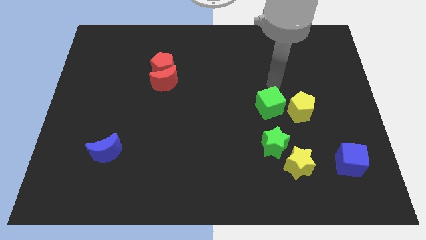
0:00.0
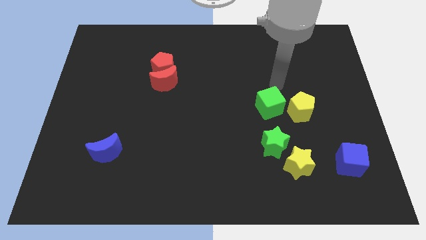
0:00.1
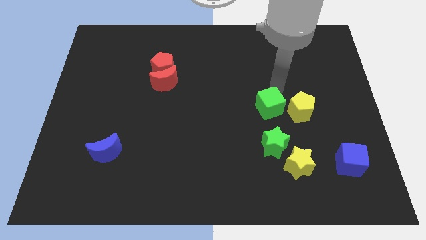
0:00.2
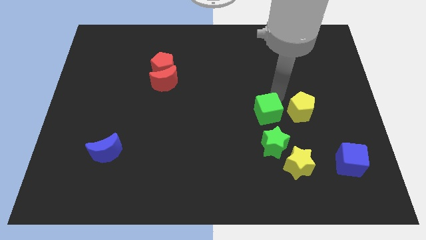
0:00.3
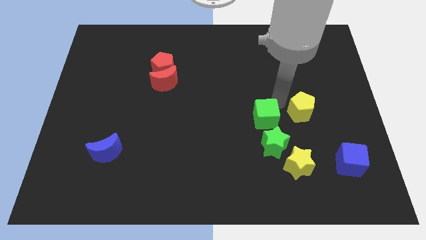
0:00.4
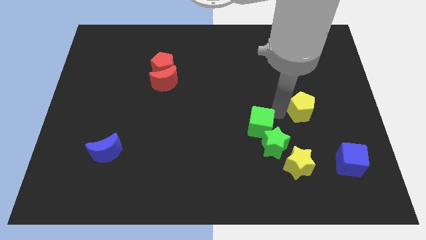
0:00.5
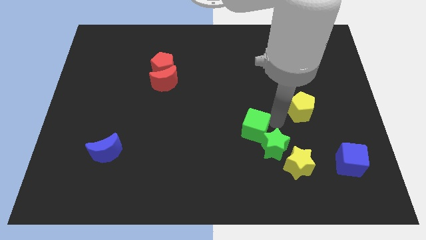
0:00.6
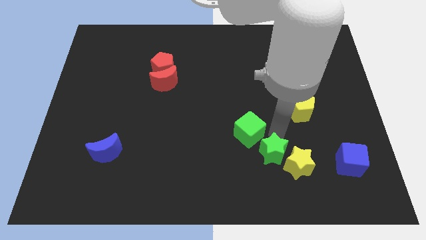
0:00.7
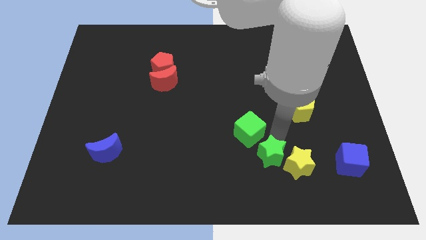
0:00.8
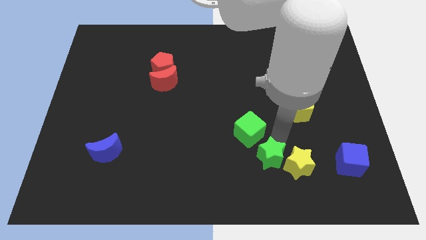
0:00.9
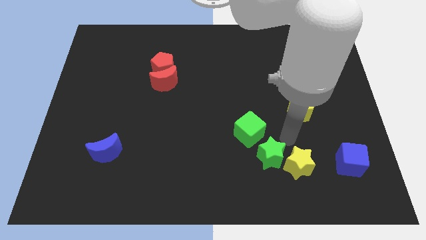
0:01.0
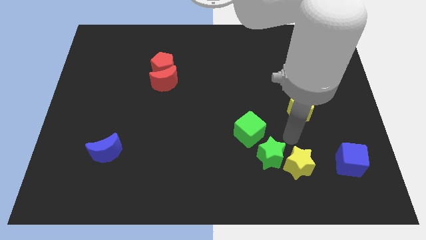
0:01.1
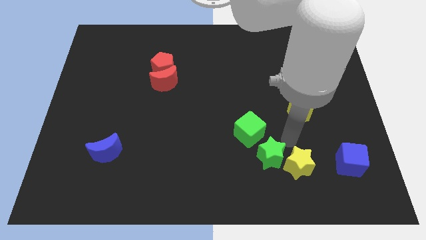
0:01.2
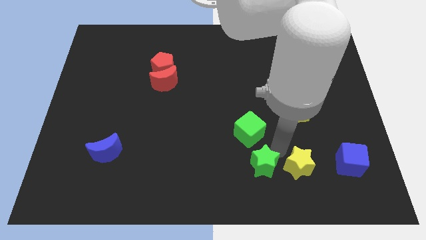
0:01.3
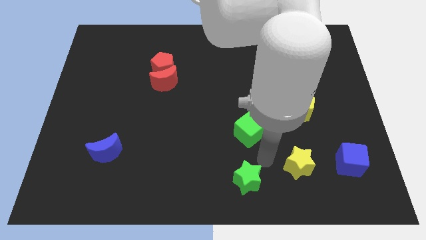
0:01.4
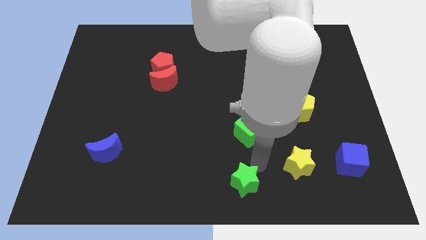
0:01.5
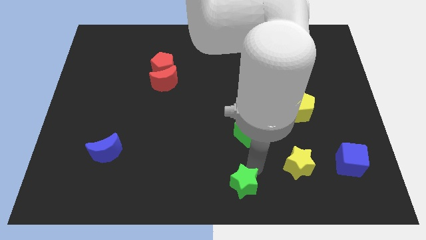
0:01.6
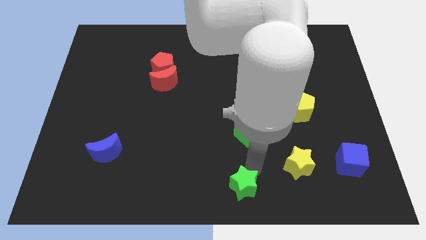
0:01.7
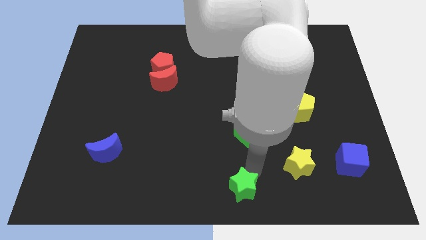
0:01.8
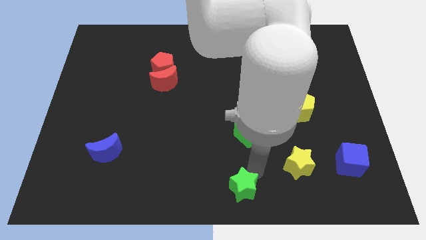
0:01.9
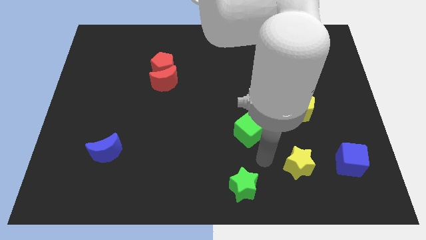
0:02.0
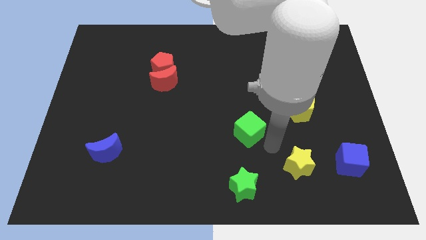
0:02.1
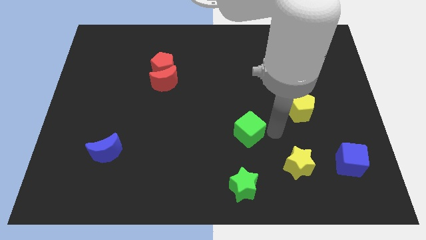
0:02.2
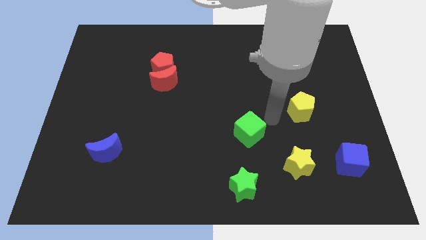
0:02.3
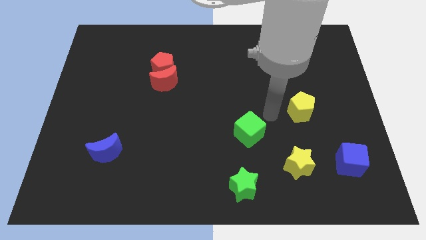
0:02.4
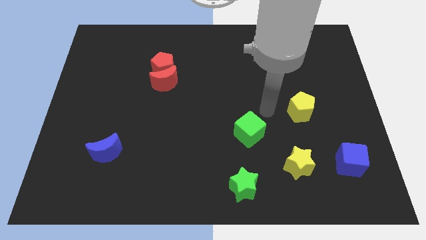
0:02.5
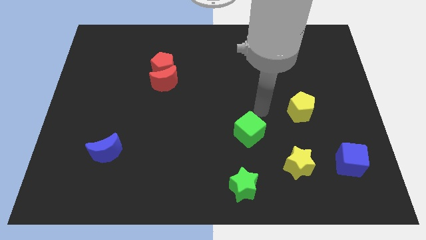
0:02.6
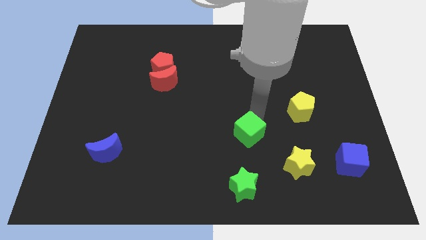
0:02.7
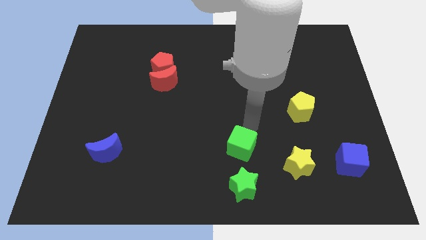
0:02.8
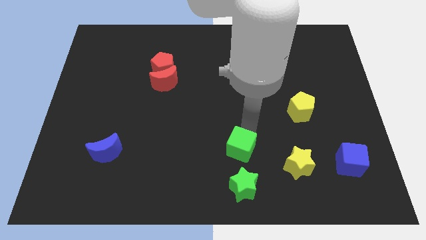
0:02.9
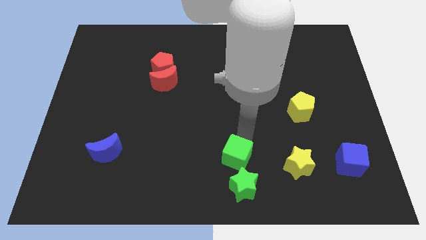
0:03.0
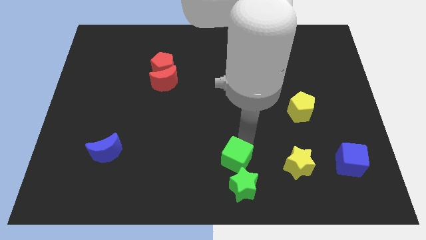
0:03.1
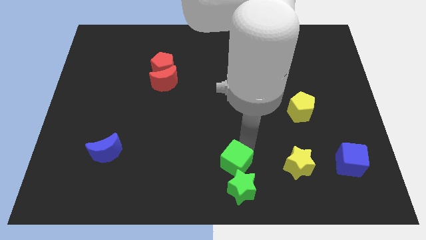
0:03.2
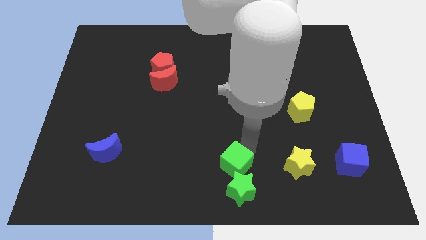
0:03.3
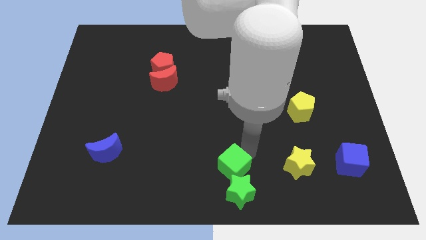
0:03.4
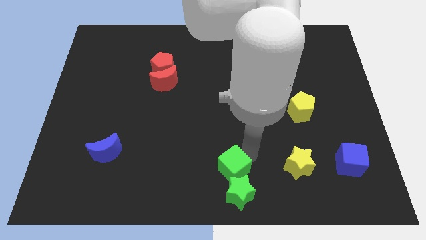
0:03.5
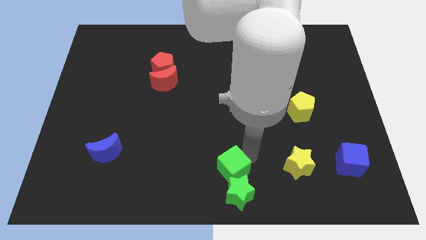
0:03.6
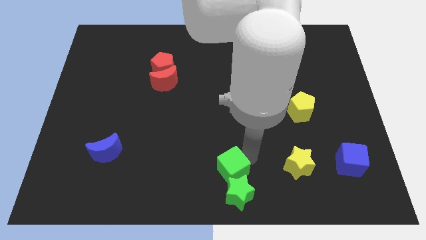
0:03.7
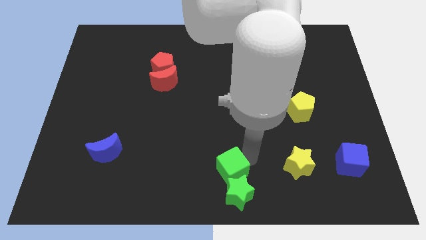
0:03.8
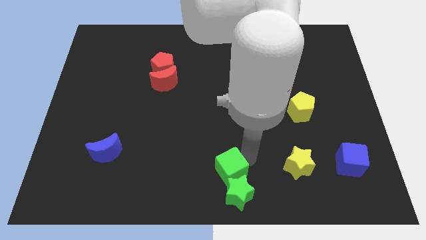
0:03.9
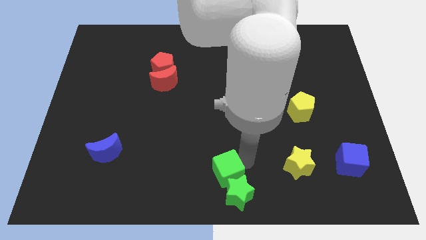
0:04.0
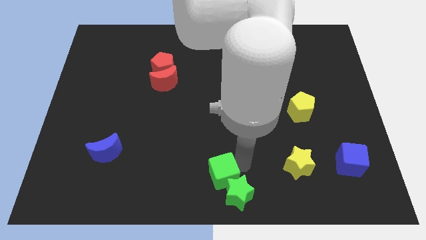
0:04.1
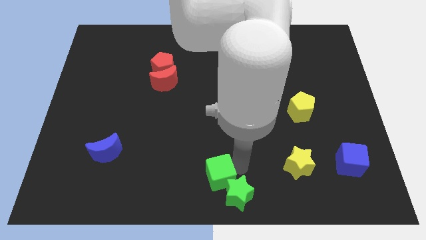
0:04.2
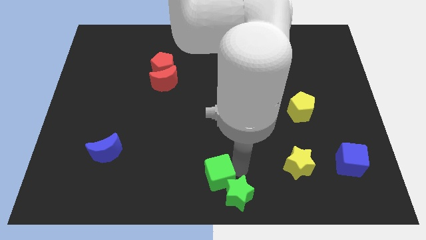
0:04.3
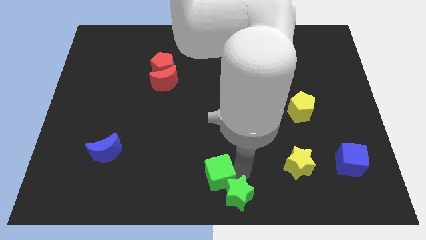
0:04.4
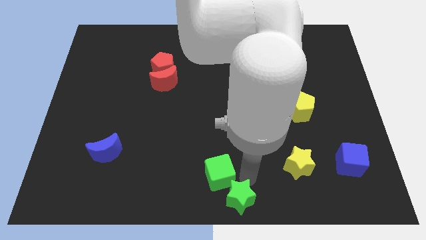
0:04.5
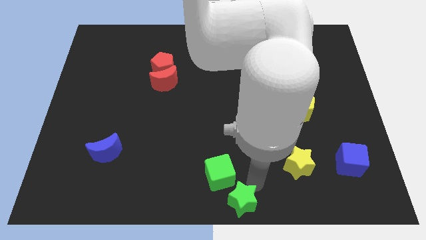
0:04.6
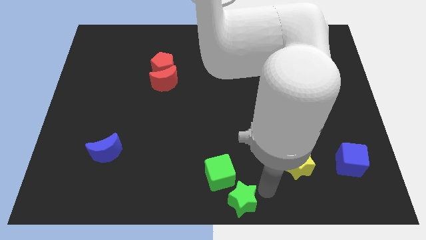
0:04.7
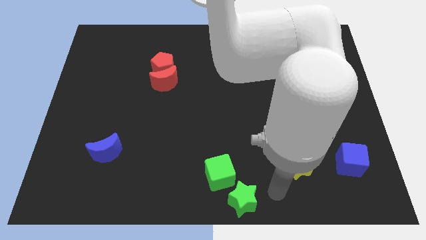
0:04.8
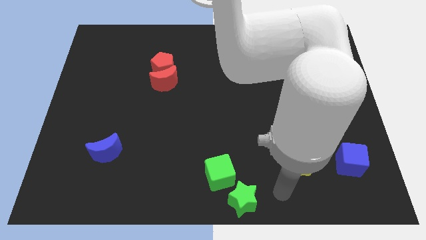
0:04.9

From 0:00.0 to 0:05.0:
push the green star and green cube to the bottom center

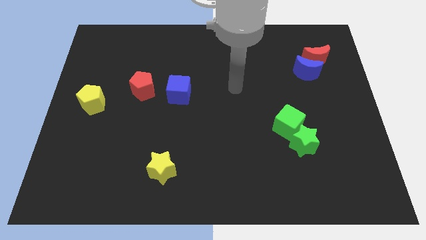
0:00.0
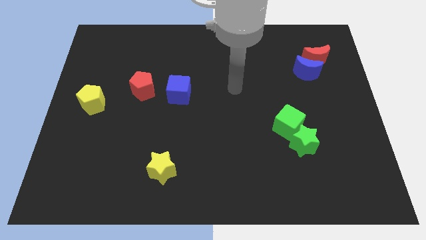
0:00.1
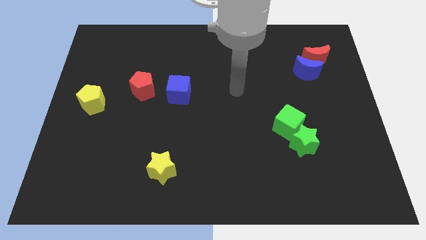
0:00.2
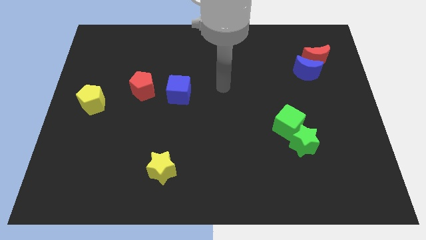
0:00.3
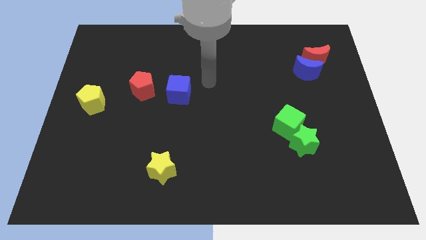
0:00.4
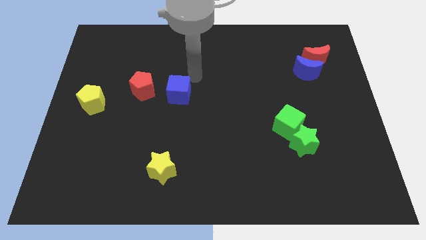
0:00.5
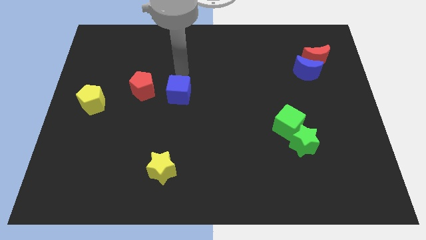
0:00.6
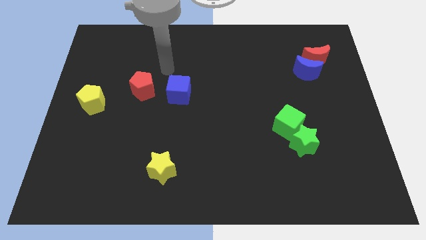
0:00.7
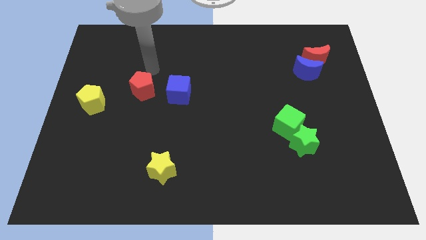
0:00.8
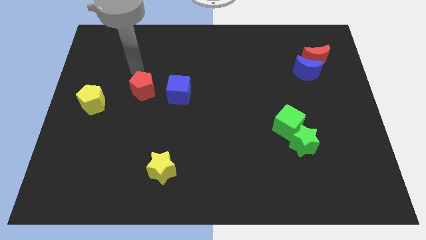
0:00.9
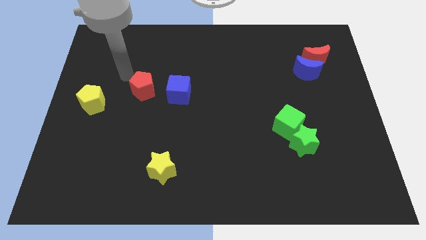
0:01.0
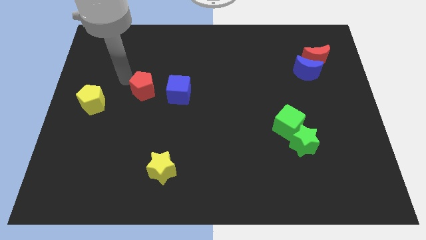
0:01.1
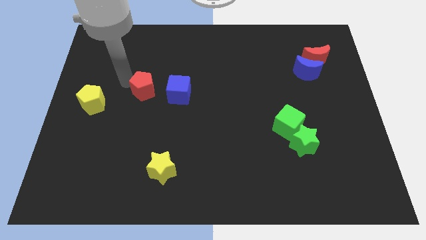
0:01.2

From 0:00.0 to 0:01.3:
point your hand at the top left side of the red pentagon

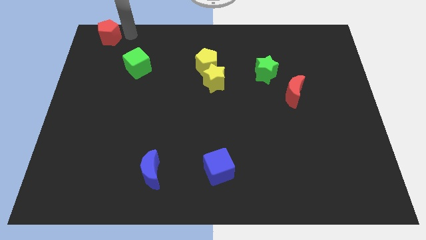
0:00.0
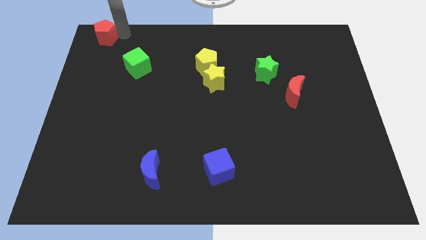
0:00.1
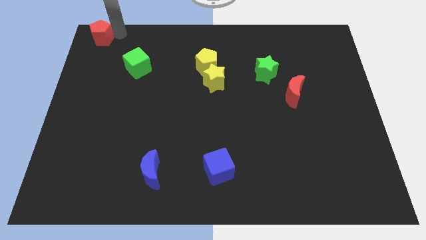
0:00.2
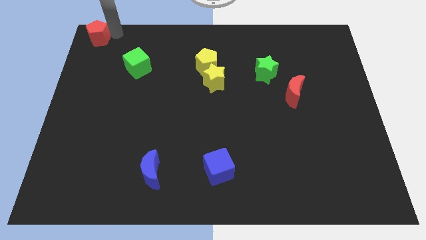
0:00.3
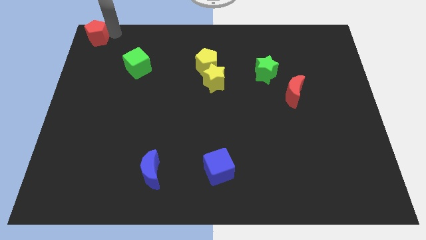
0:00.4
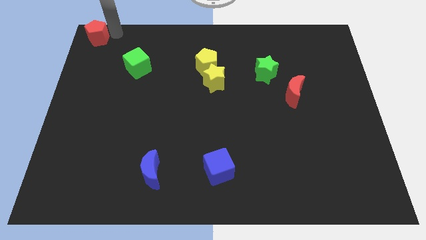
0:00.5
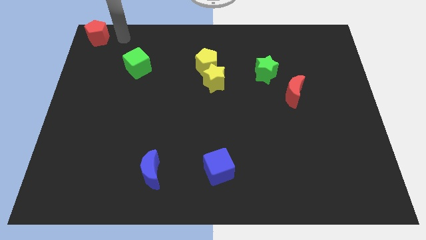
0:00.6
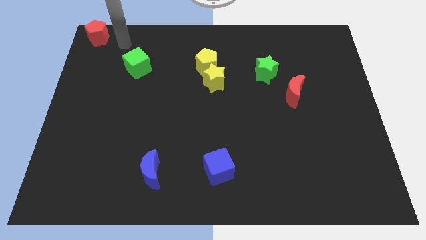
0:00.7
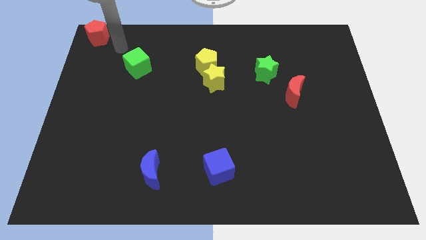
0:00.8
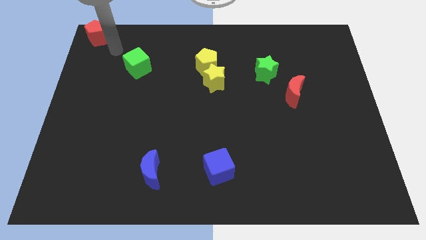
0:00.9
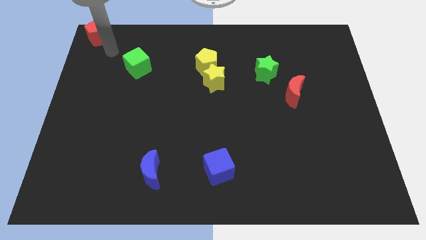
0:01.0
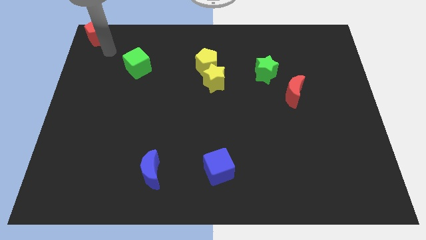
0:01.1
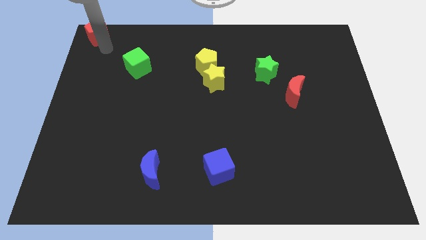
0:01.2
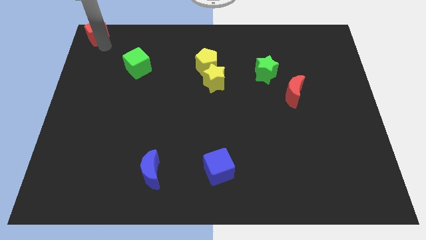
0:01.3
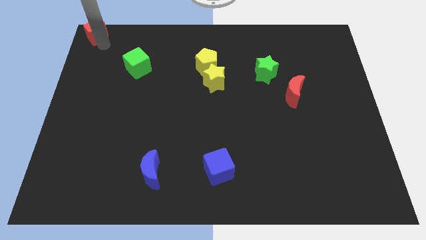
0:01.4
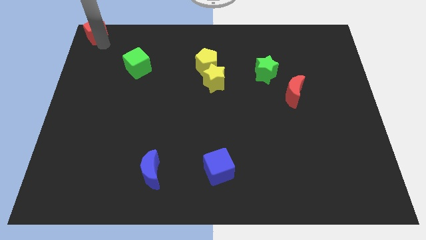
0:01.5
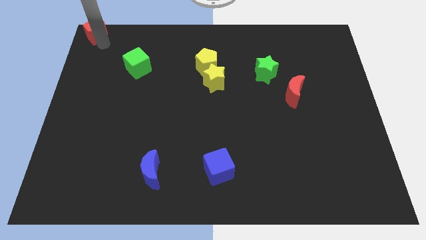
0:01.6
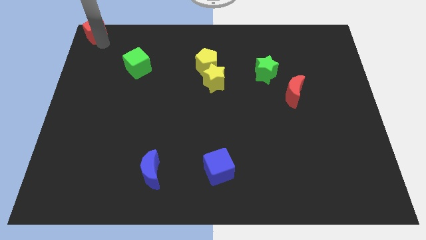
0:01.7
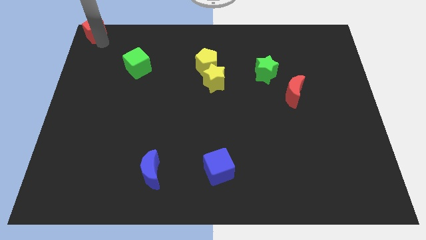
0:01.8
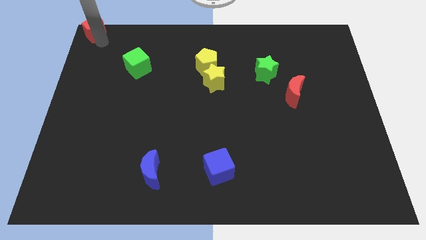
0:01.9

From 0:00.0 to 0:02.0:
push the red pentagon to the top left corner of the board

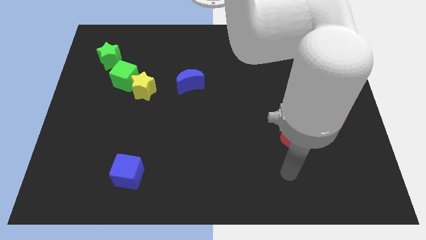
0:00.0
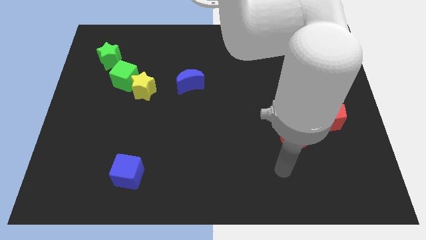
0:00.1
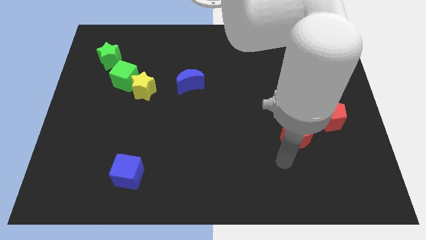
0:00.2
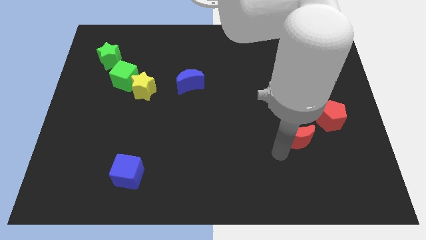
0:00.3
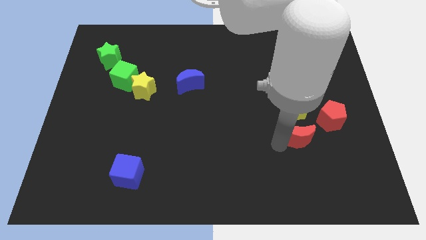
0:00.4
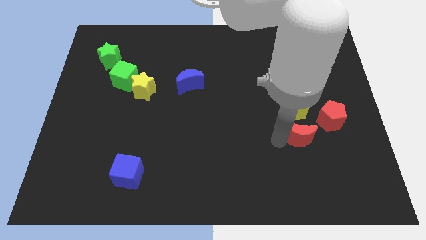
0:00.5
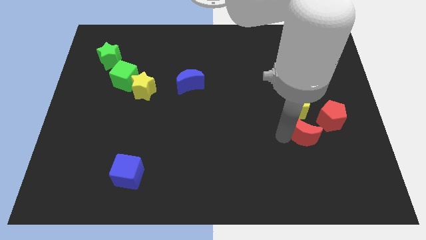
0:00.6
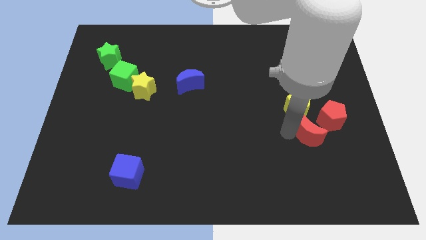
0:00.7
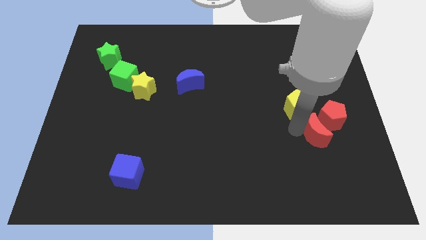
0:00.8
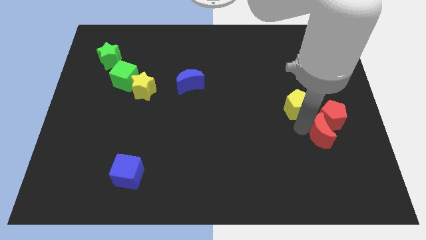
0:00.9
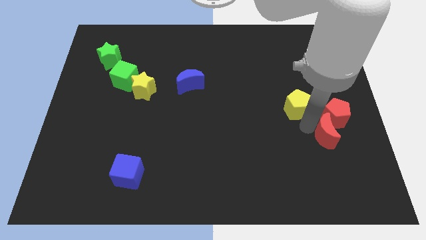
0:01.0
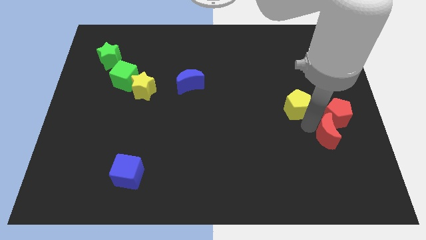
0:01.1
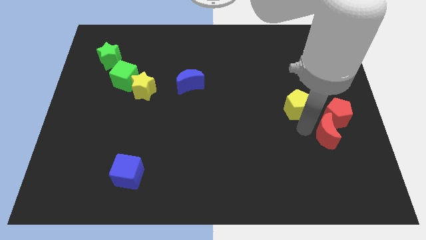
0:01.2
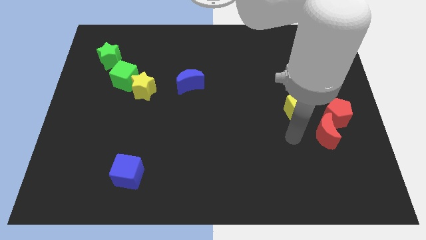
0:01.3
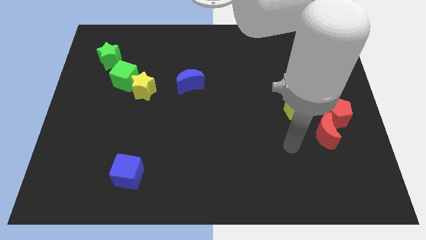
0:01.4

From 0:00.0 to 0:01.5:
push the red crescent to the bottom left of the red pentagon
